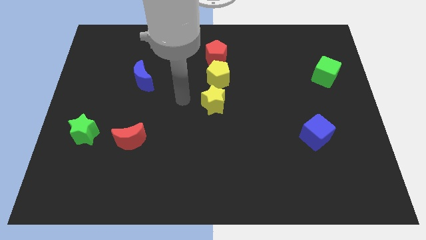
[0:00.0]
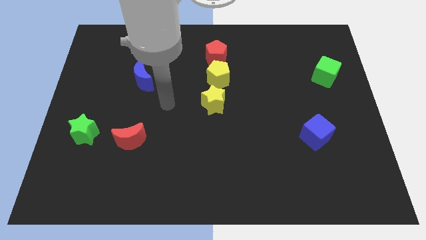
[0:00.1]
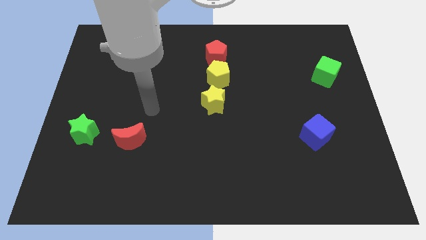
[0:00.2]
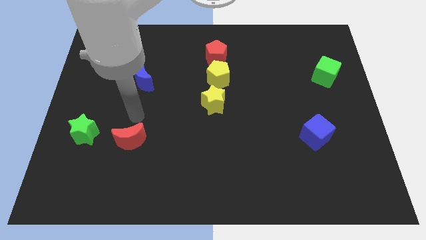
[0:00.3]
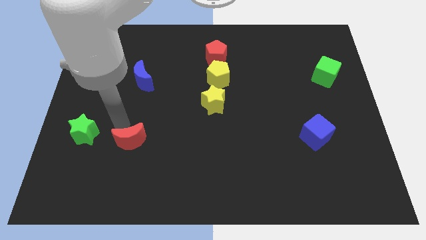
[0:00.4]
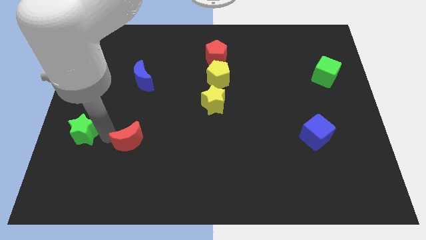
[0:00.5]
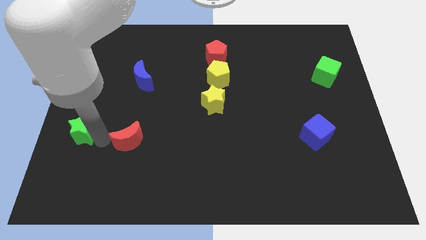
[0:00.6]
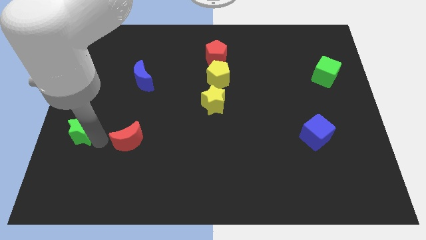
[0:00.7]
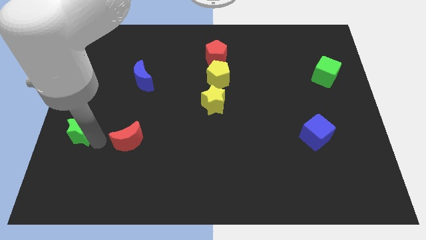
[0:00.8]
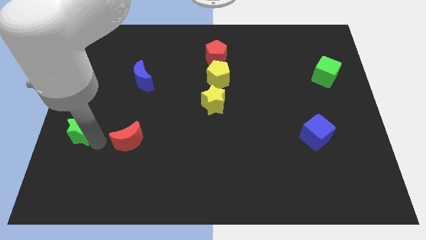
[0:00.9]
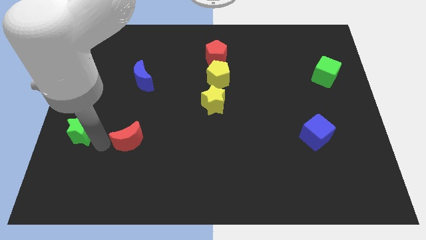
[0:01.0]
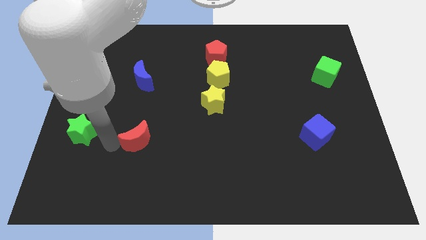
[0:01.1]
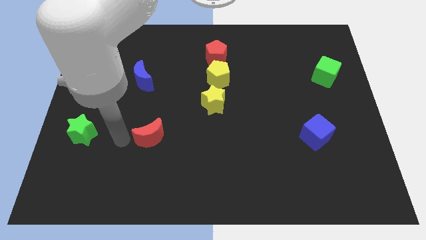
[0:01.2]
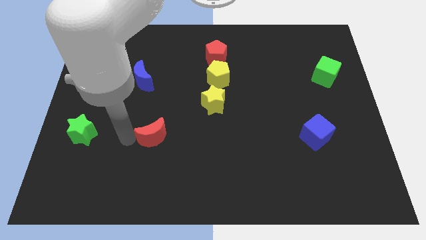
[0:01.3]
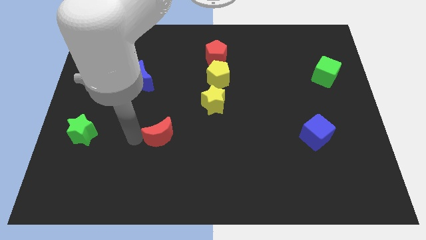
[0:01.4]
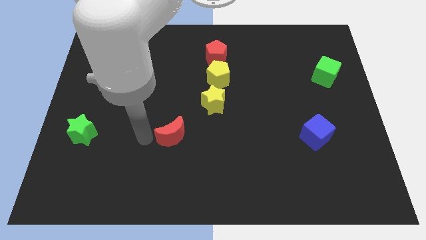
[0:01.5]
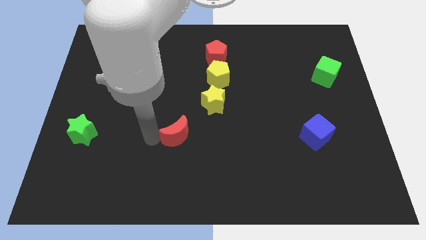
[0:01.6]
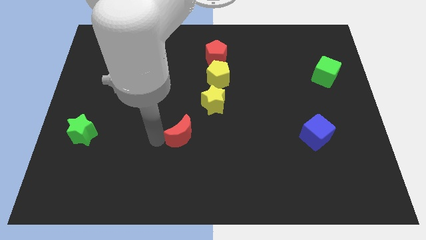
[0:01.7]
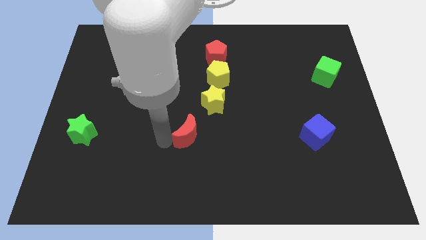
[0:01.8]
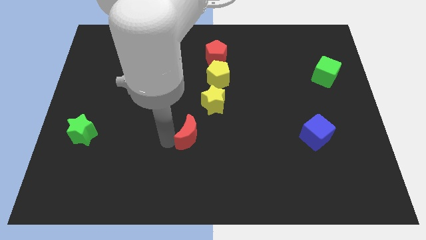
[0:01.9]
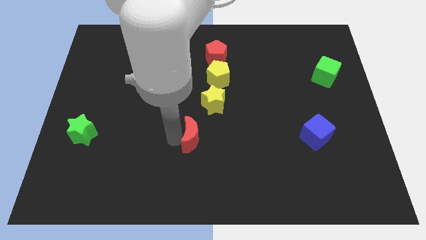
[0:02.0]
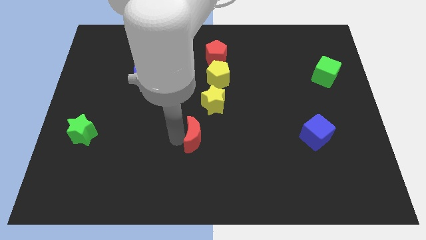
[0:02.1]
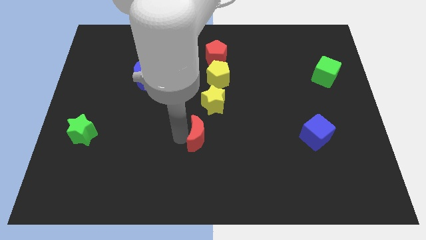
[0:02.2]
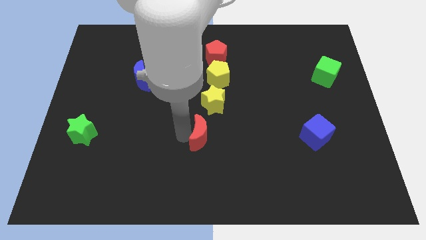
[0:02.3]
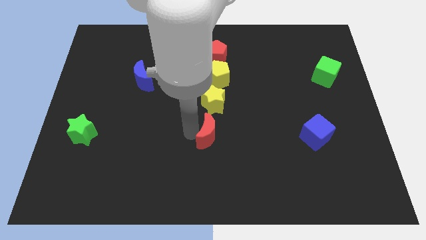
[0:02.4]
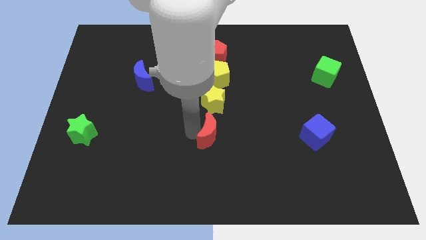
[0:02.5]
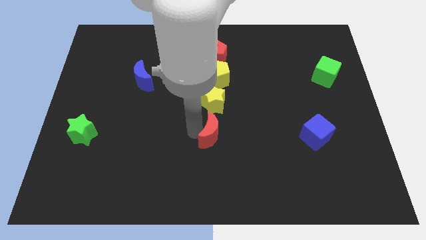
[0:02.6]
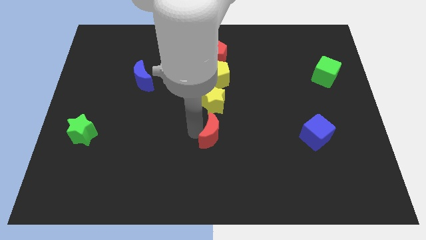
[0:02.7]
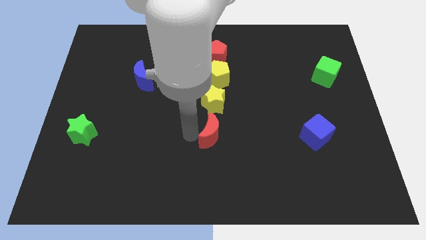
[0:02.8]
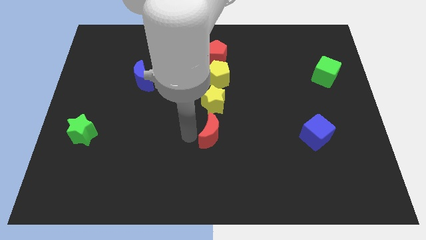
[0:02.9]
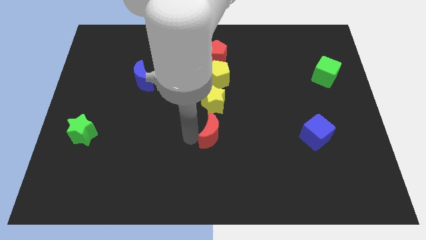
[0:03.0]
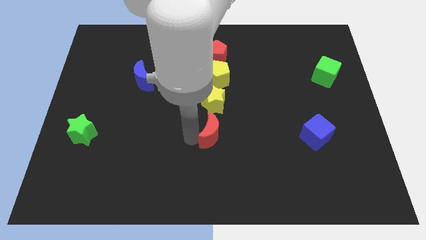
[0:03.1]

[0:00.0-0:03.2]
move the red crescent to the bottom side of the yellow star

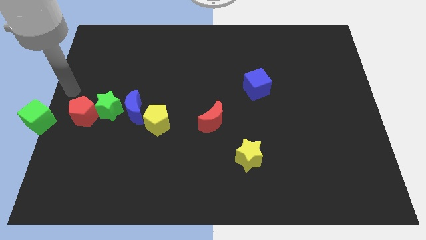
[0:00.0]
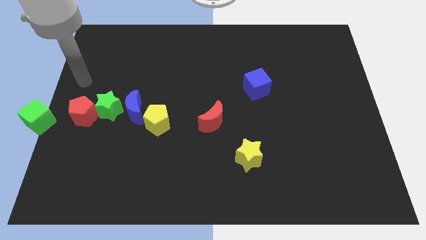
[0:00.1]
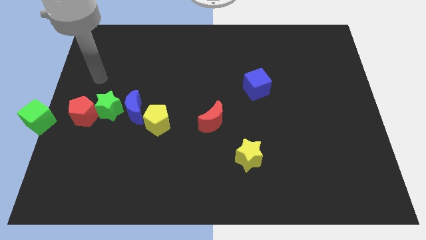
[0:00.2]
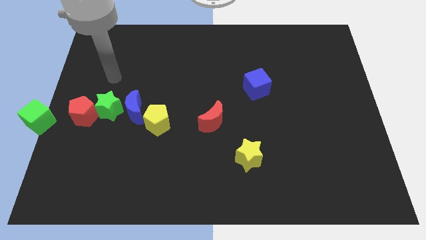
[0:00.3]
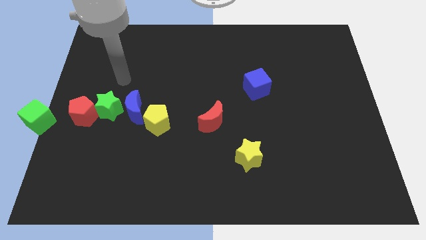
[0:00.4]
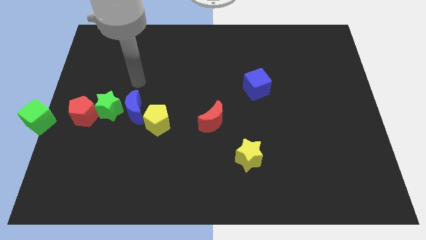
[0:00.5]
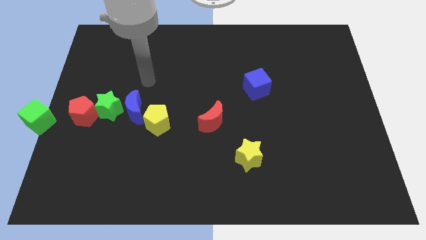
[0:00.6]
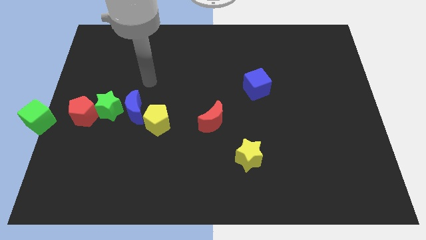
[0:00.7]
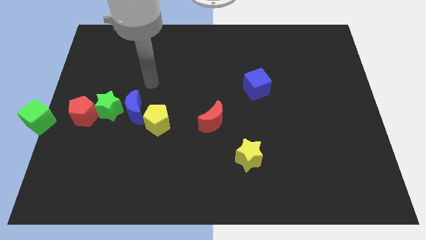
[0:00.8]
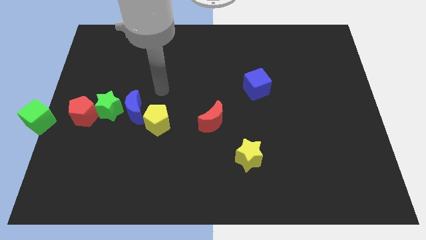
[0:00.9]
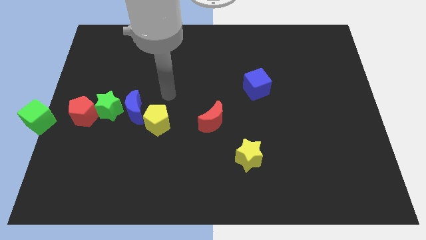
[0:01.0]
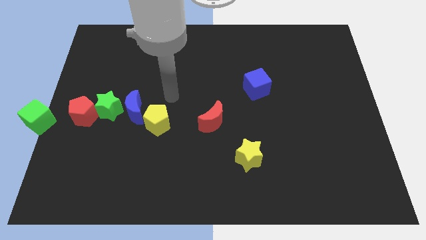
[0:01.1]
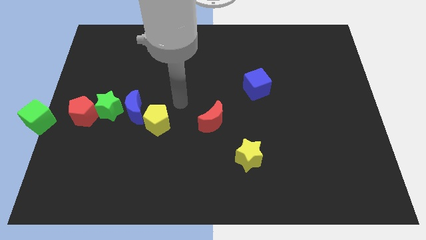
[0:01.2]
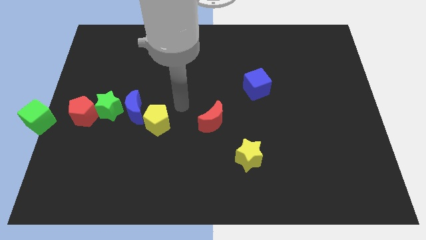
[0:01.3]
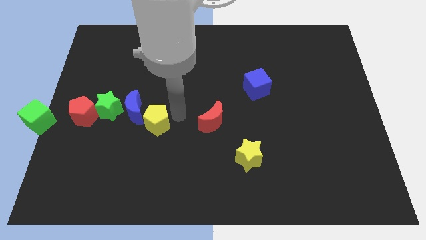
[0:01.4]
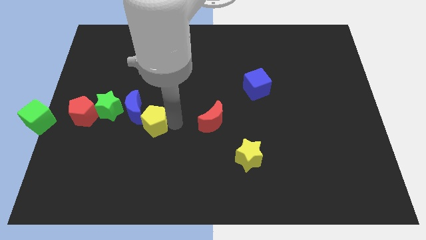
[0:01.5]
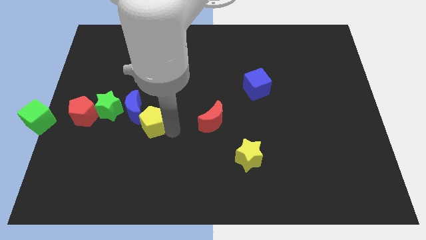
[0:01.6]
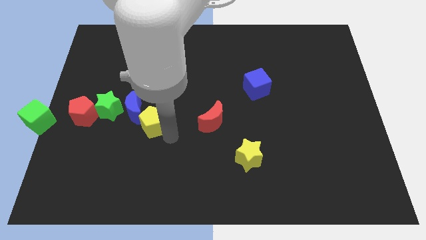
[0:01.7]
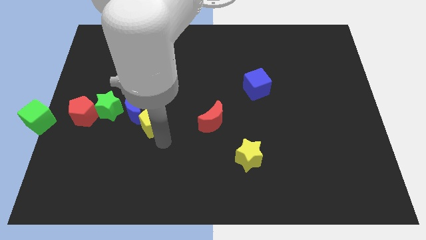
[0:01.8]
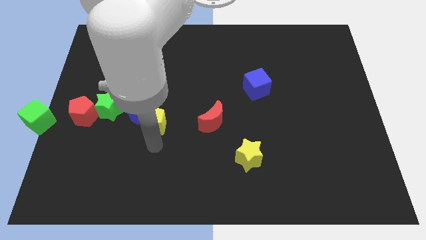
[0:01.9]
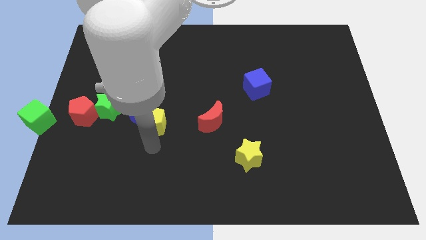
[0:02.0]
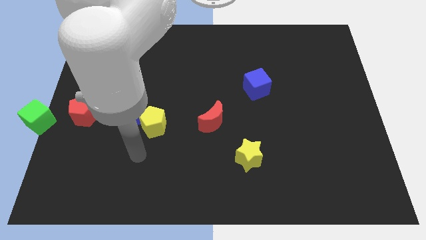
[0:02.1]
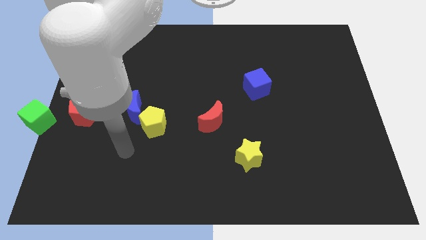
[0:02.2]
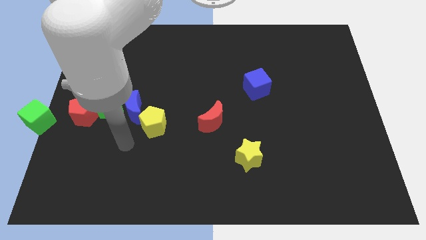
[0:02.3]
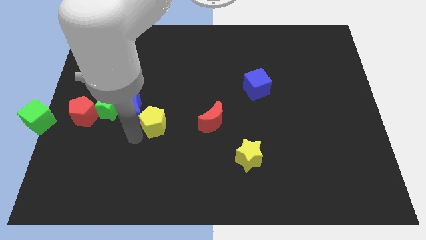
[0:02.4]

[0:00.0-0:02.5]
move the arm left to the yellow pentagon

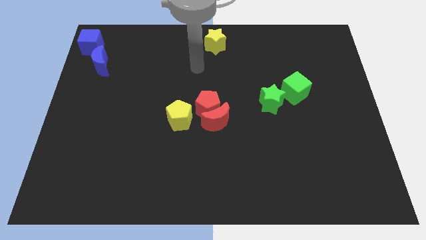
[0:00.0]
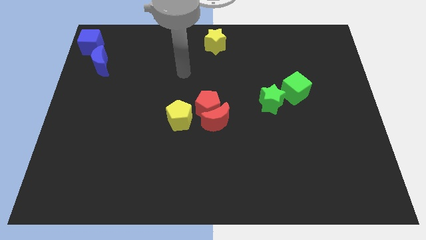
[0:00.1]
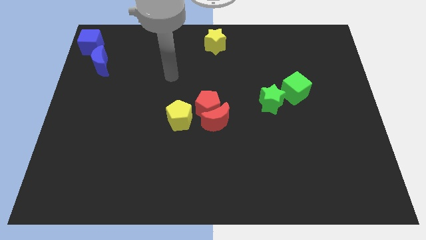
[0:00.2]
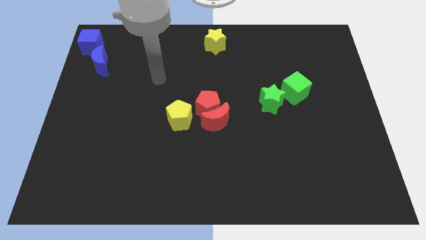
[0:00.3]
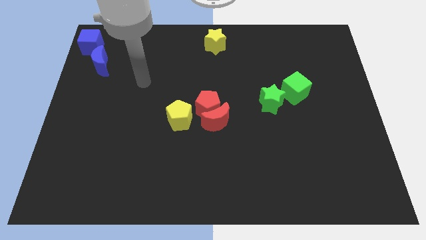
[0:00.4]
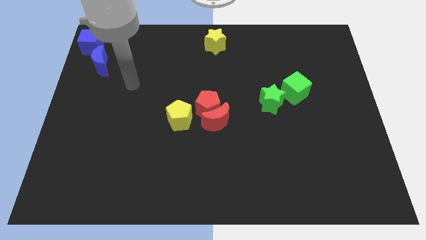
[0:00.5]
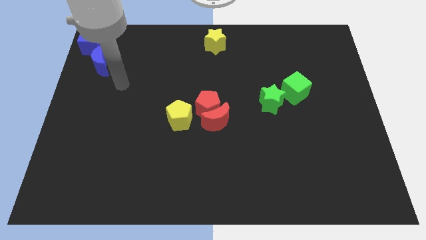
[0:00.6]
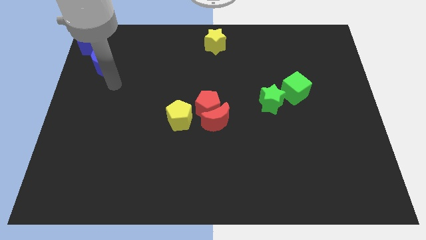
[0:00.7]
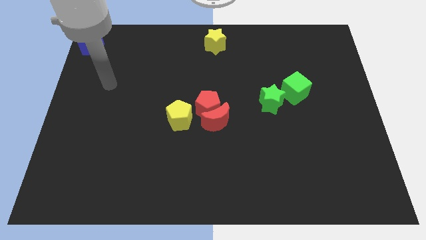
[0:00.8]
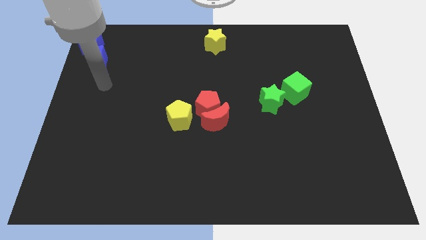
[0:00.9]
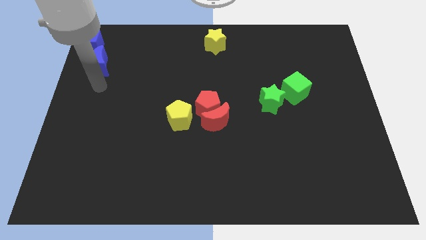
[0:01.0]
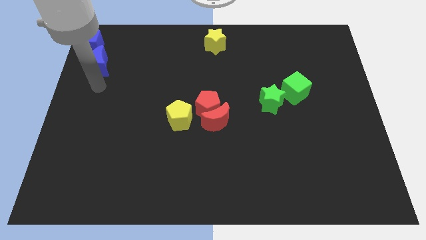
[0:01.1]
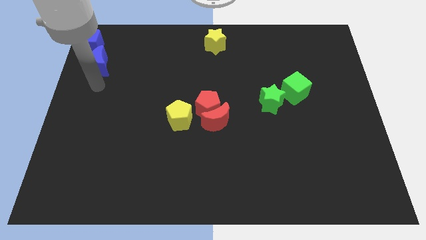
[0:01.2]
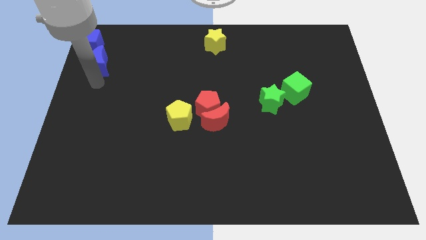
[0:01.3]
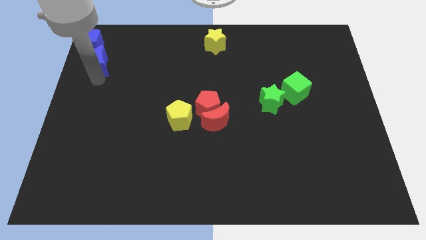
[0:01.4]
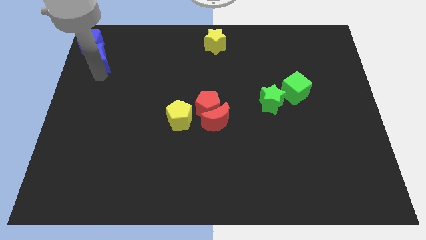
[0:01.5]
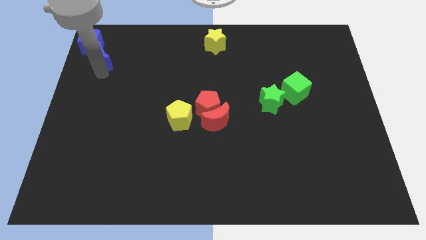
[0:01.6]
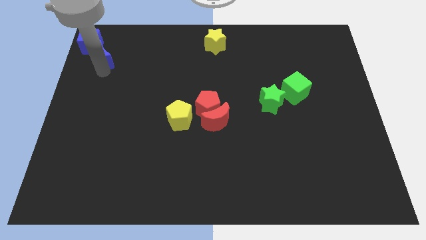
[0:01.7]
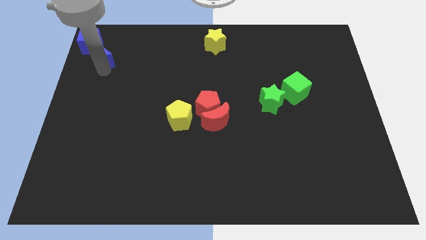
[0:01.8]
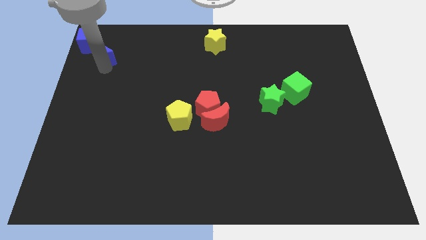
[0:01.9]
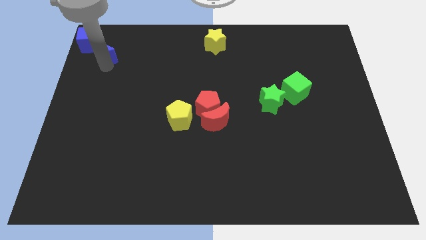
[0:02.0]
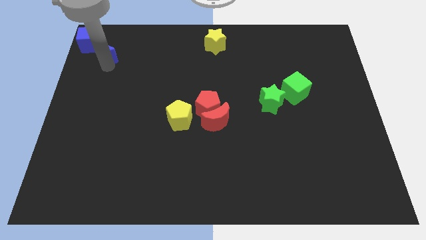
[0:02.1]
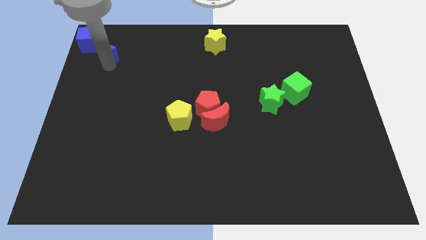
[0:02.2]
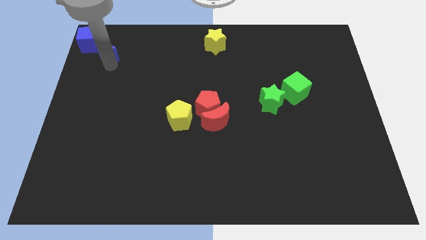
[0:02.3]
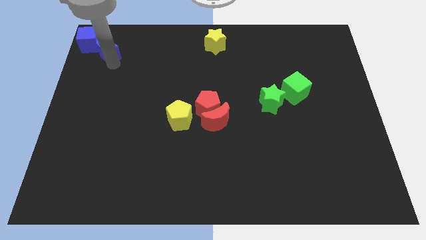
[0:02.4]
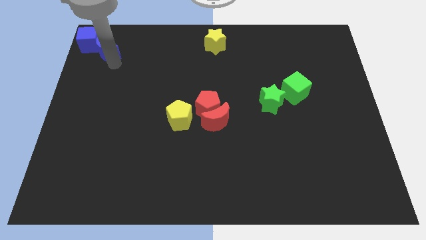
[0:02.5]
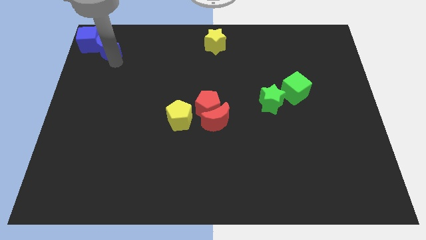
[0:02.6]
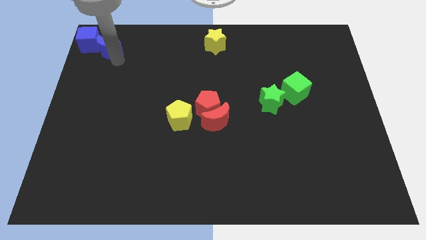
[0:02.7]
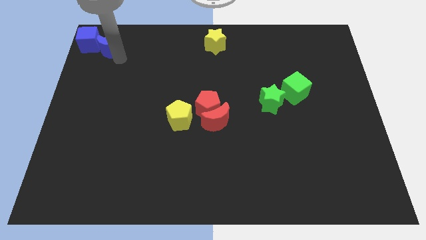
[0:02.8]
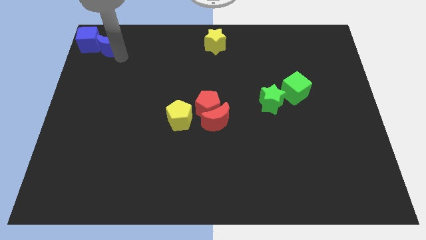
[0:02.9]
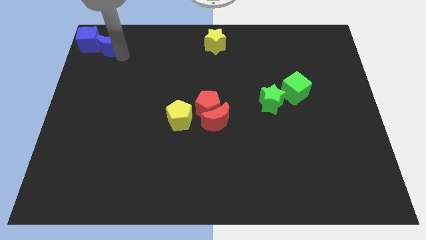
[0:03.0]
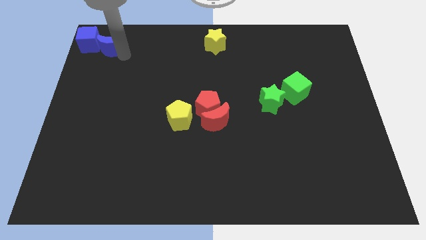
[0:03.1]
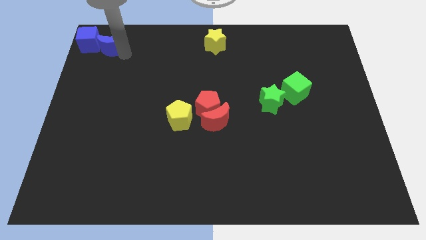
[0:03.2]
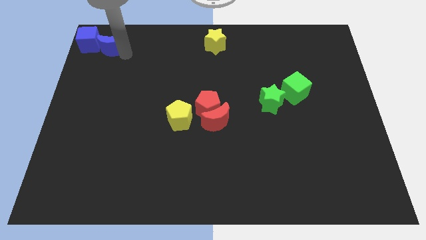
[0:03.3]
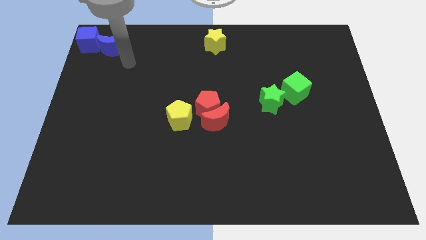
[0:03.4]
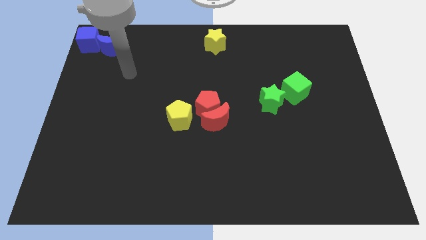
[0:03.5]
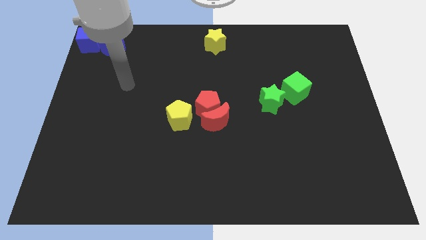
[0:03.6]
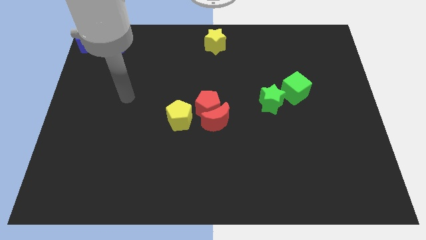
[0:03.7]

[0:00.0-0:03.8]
put the blue crescent on the right side of the blue cube
